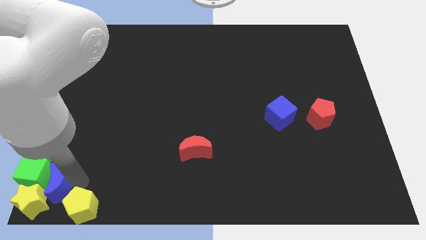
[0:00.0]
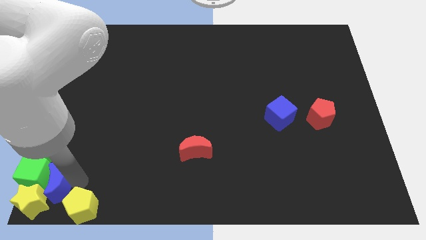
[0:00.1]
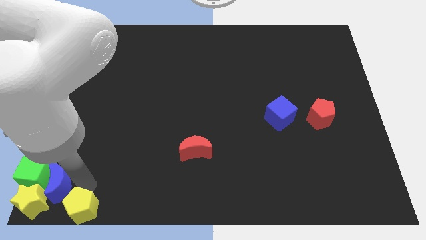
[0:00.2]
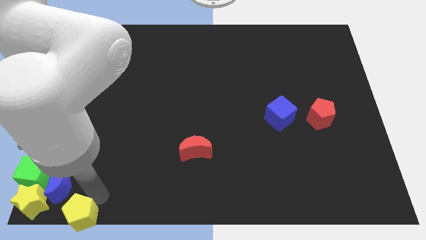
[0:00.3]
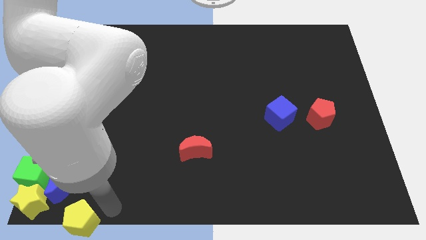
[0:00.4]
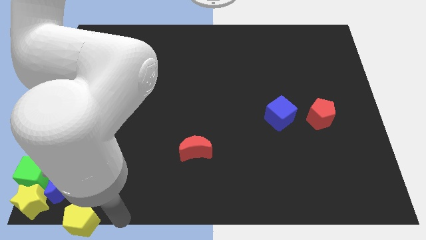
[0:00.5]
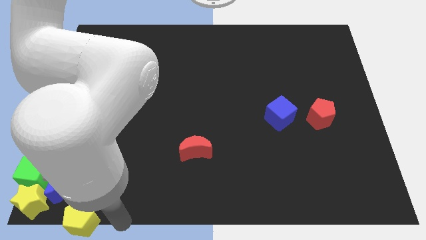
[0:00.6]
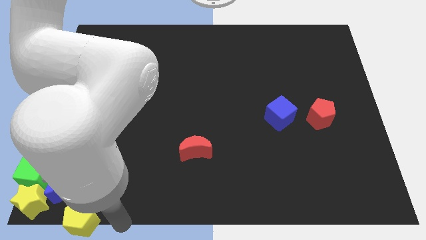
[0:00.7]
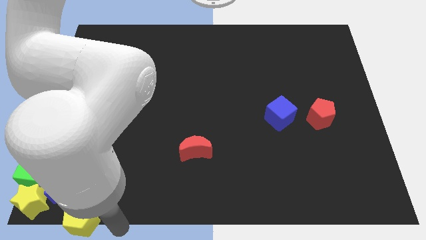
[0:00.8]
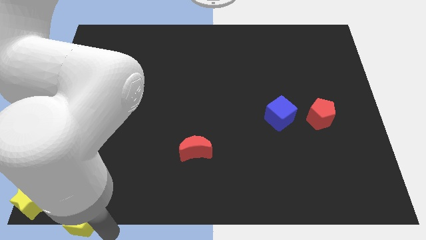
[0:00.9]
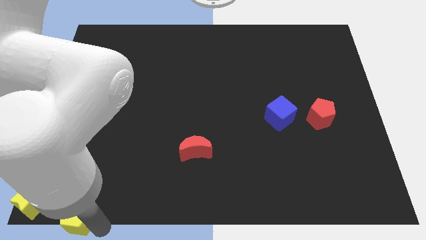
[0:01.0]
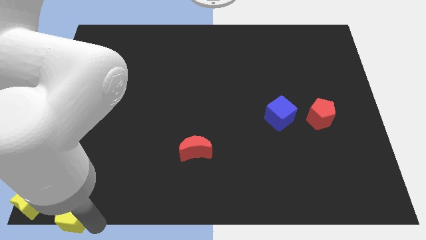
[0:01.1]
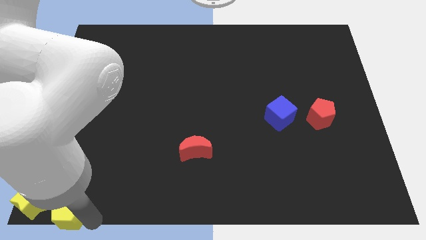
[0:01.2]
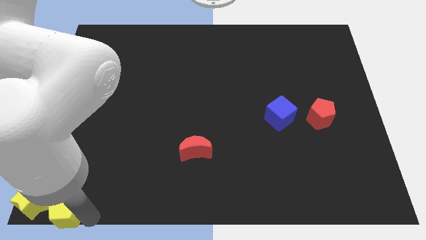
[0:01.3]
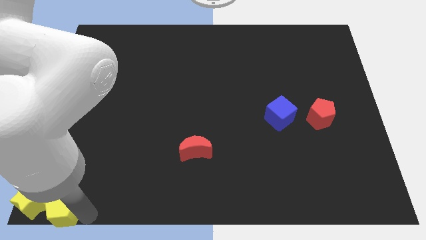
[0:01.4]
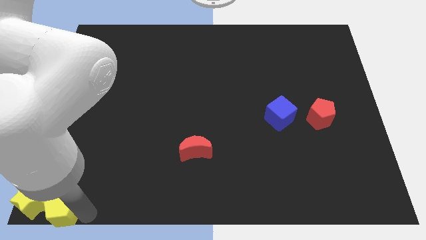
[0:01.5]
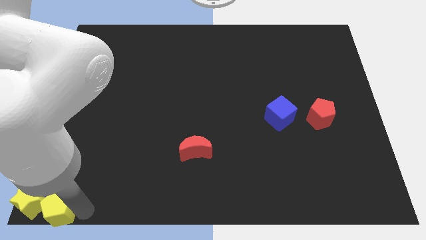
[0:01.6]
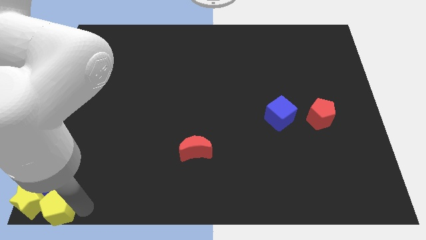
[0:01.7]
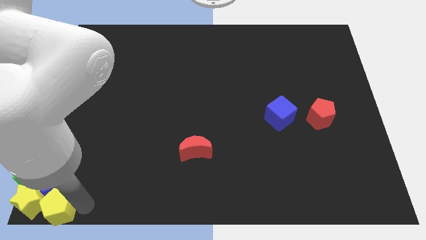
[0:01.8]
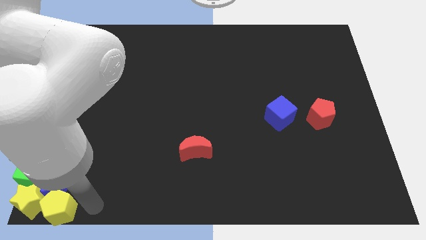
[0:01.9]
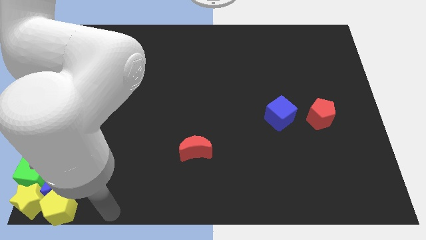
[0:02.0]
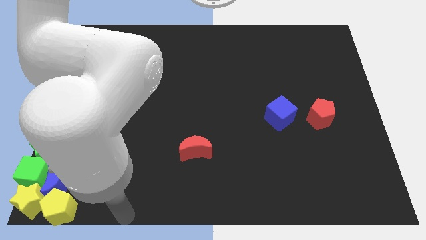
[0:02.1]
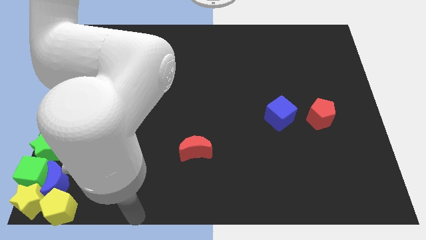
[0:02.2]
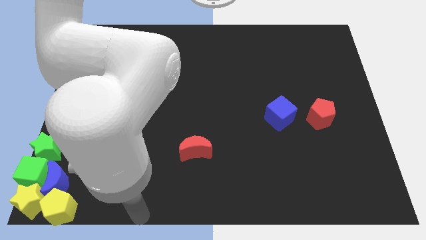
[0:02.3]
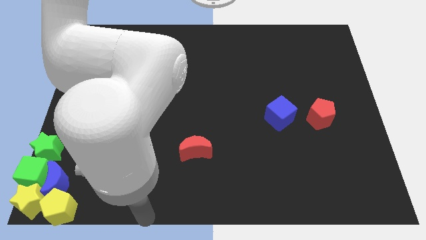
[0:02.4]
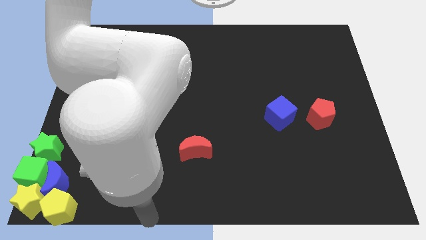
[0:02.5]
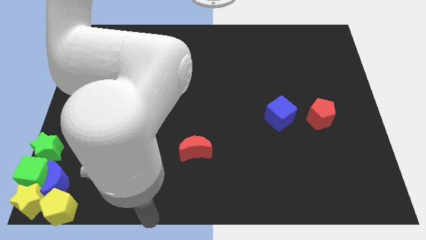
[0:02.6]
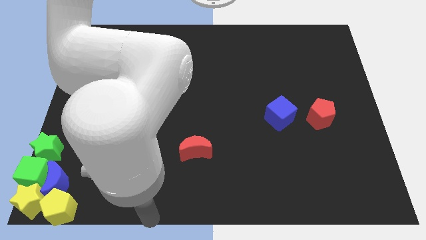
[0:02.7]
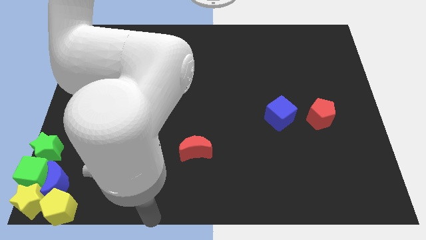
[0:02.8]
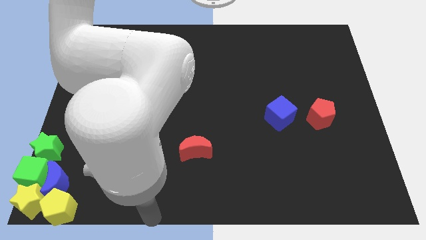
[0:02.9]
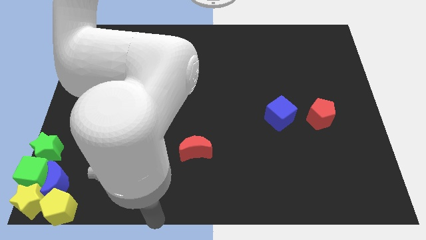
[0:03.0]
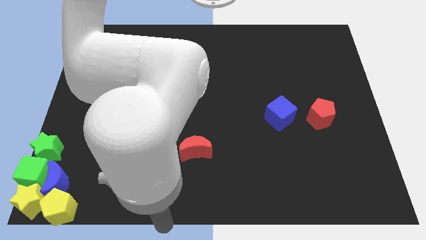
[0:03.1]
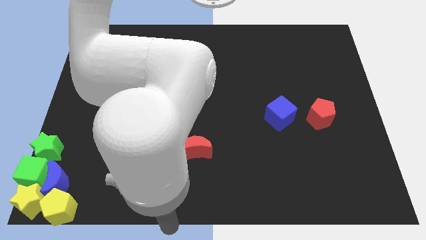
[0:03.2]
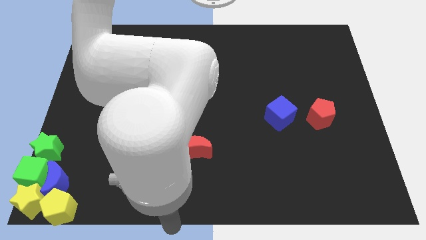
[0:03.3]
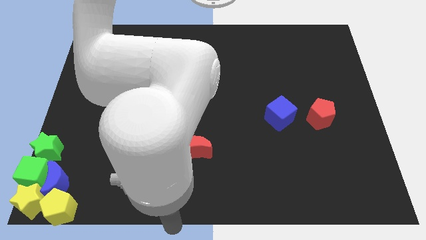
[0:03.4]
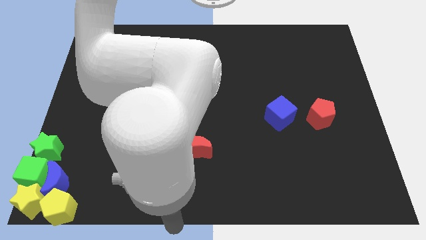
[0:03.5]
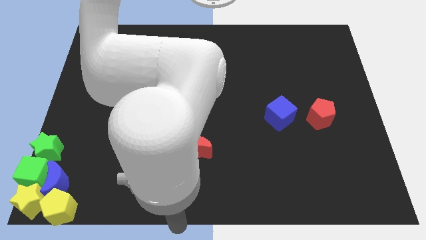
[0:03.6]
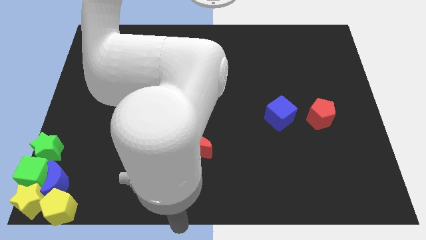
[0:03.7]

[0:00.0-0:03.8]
push the yellow pentagon into the group of blocks

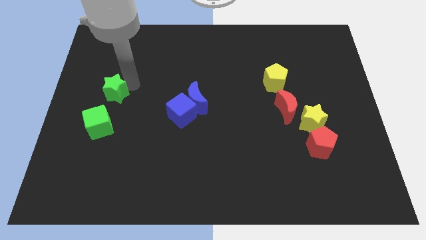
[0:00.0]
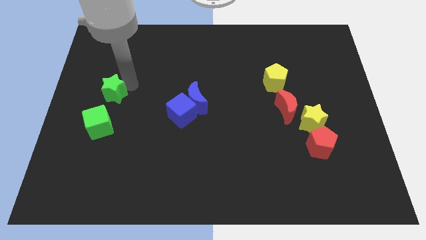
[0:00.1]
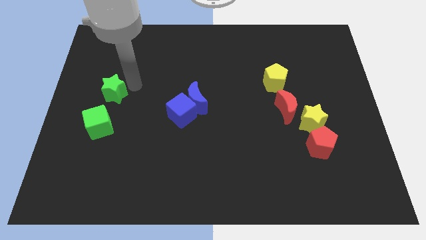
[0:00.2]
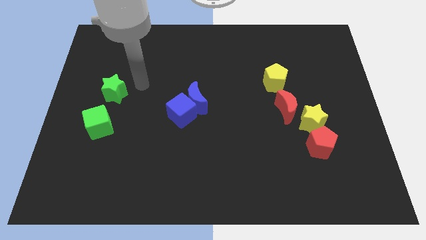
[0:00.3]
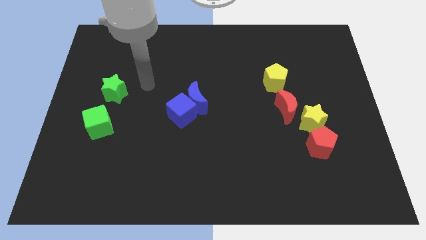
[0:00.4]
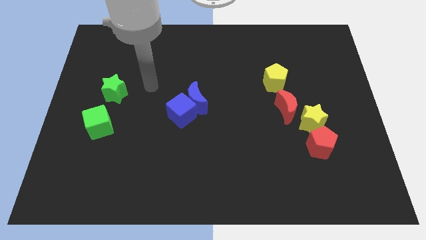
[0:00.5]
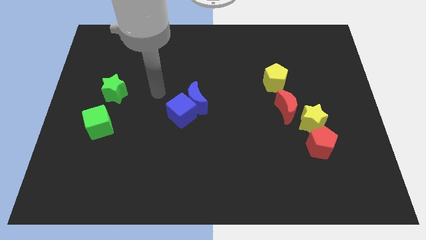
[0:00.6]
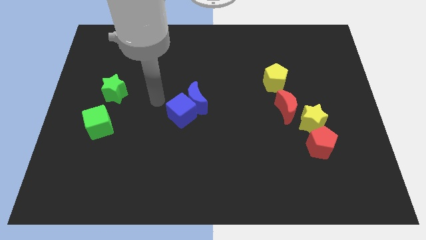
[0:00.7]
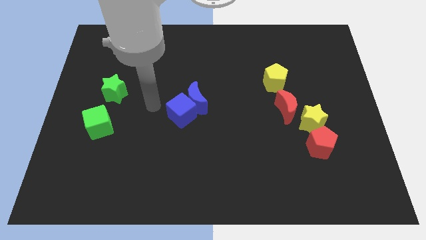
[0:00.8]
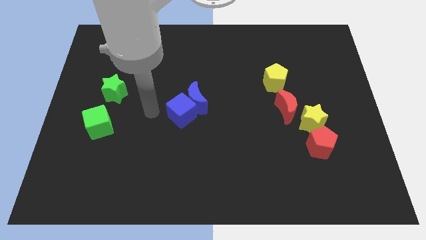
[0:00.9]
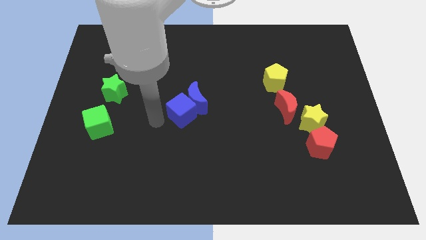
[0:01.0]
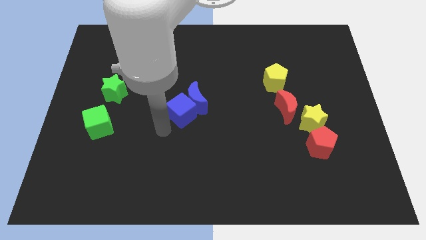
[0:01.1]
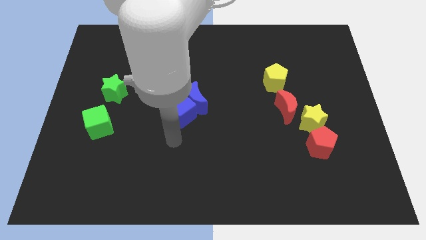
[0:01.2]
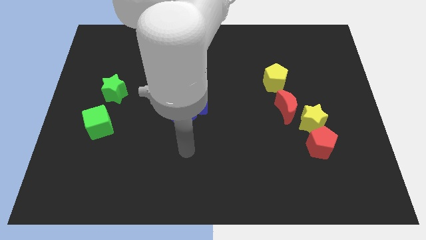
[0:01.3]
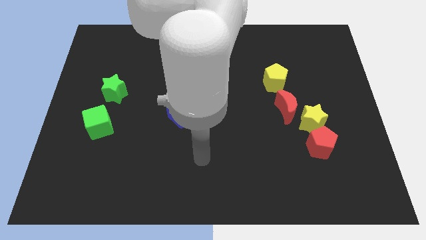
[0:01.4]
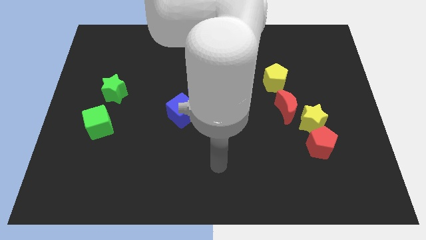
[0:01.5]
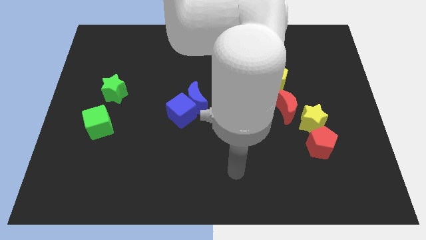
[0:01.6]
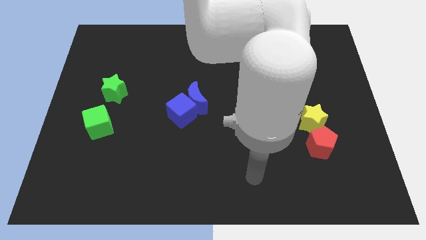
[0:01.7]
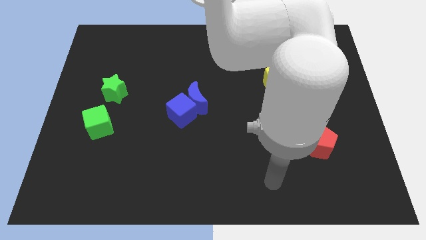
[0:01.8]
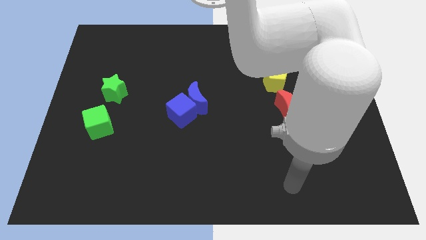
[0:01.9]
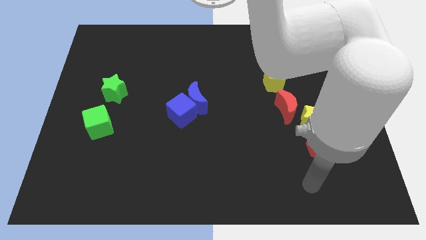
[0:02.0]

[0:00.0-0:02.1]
move your arm away from the green star

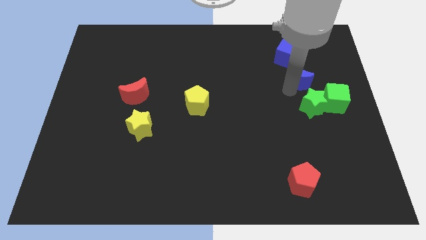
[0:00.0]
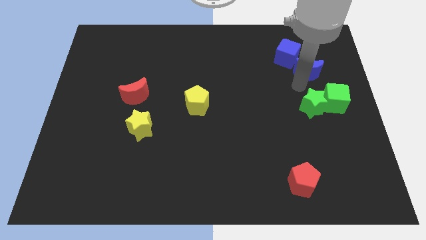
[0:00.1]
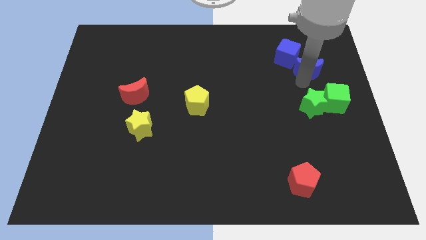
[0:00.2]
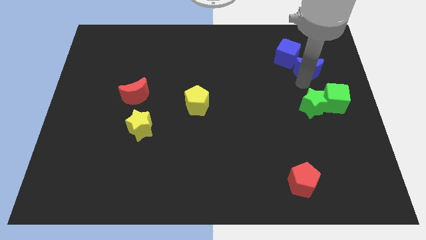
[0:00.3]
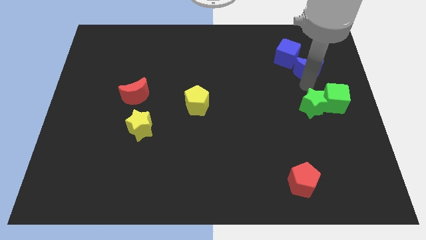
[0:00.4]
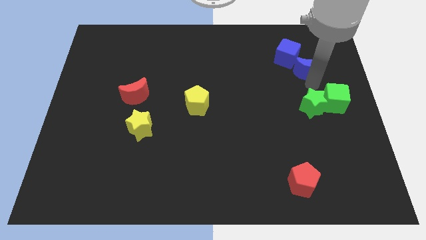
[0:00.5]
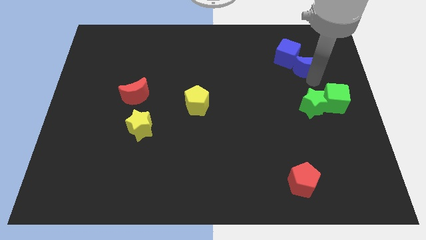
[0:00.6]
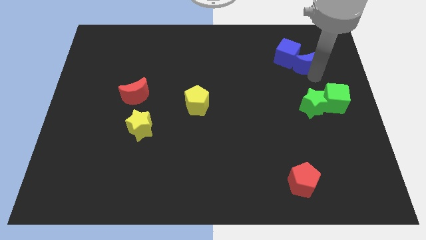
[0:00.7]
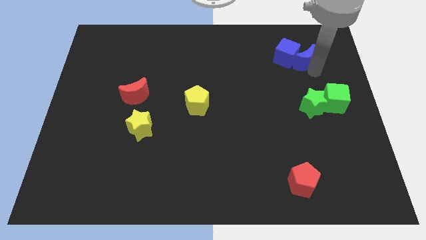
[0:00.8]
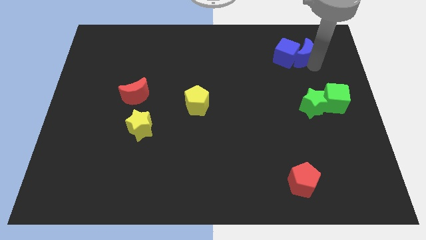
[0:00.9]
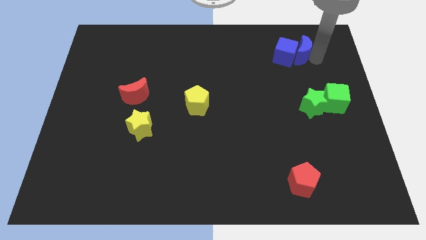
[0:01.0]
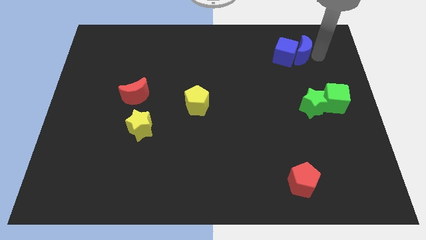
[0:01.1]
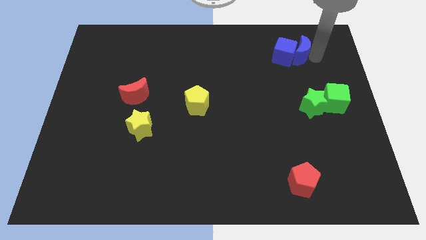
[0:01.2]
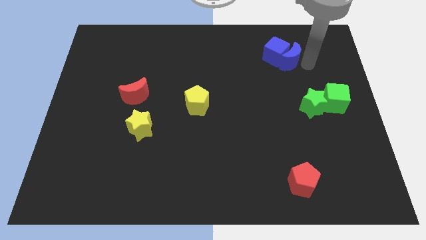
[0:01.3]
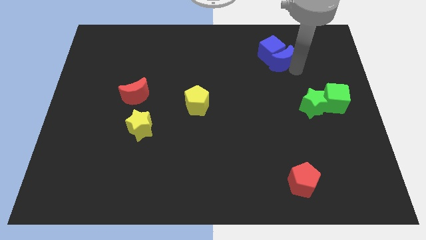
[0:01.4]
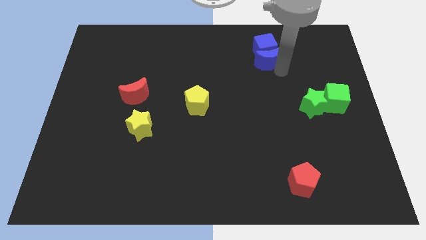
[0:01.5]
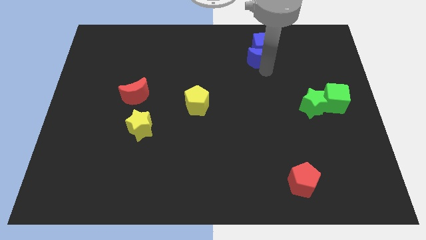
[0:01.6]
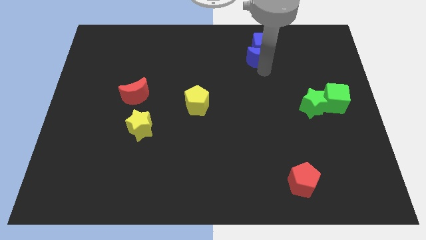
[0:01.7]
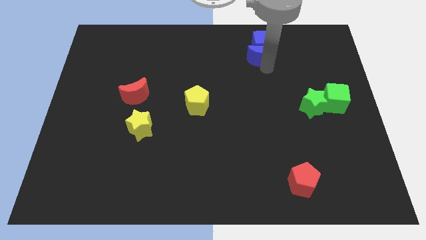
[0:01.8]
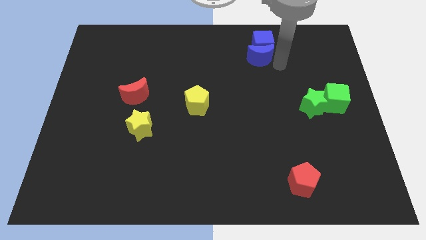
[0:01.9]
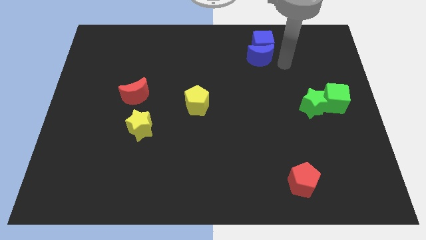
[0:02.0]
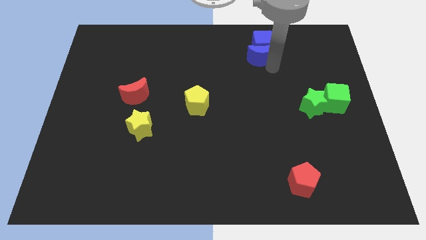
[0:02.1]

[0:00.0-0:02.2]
push the blue crescent into the blue cube

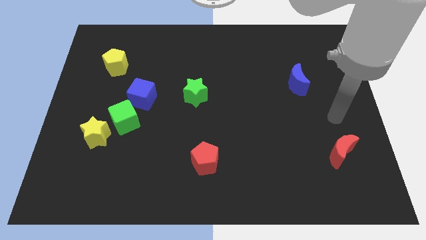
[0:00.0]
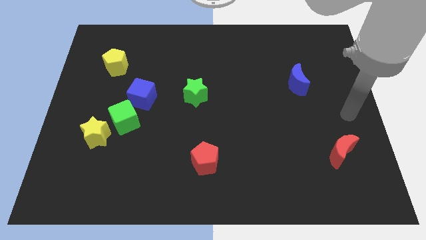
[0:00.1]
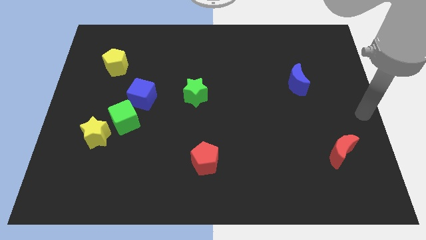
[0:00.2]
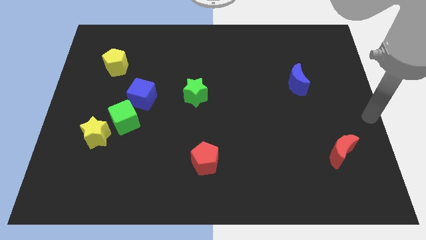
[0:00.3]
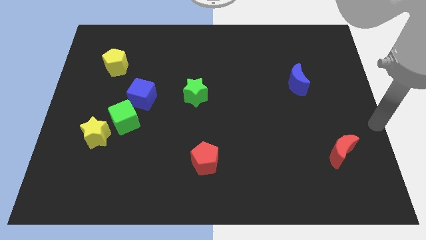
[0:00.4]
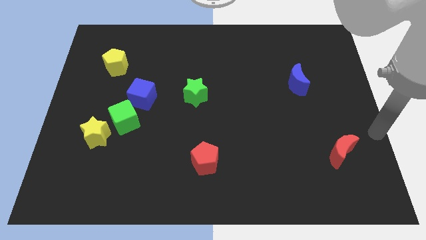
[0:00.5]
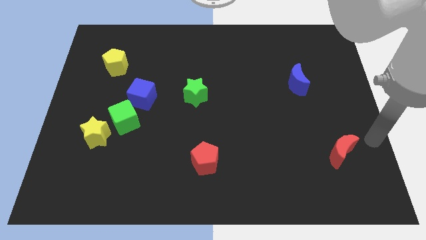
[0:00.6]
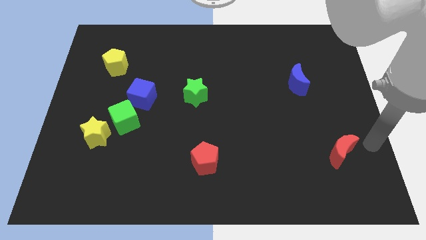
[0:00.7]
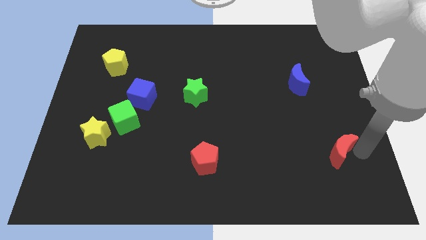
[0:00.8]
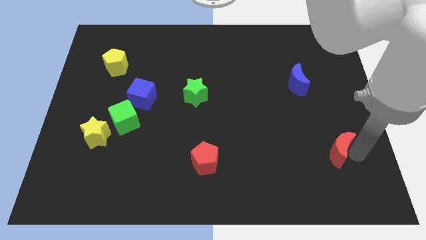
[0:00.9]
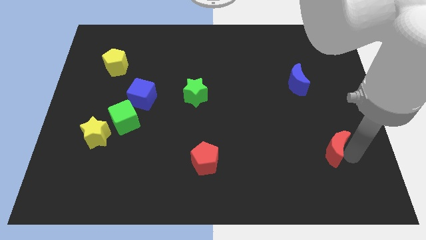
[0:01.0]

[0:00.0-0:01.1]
touch the right side of the red crescent
